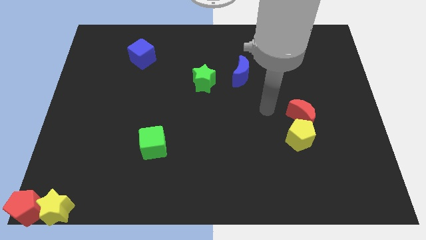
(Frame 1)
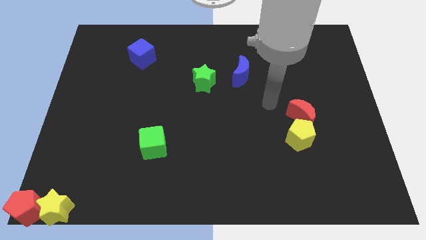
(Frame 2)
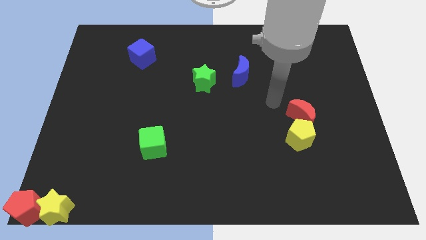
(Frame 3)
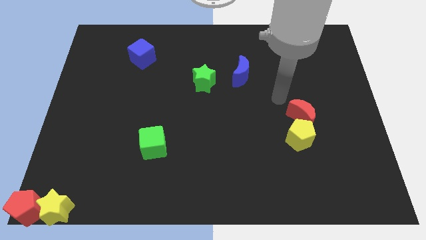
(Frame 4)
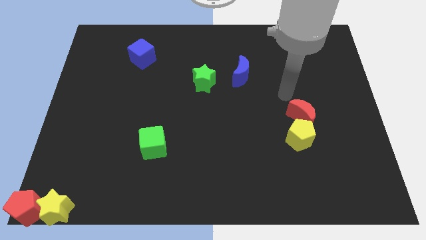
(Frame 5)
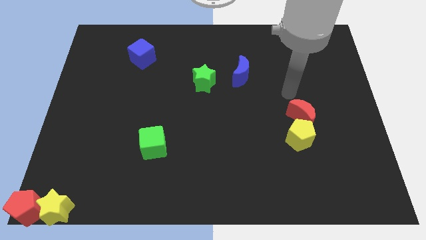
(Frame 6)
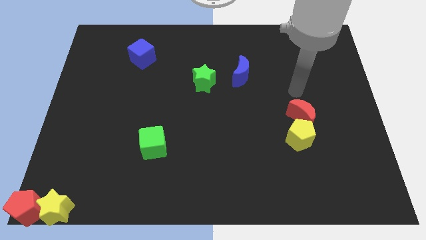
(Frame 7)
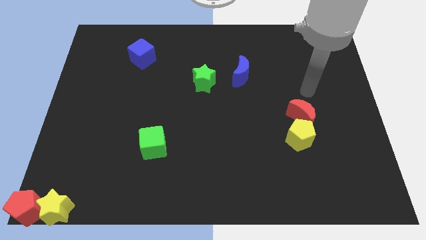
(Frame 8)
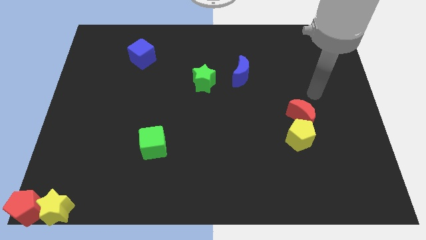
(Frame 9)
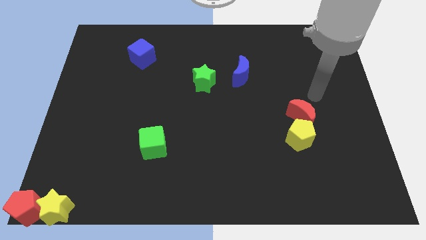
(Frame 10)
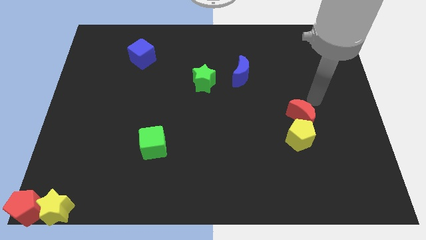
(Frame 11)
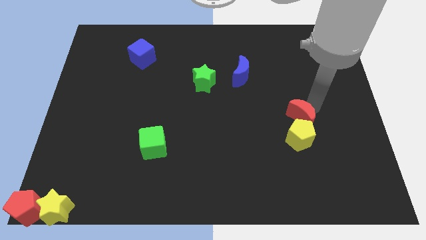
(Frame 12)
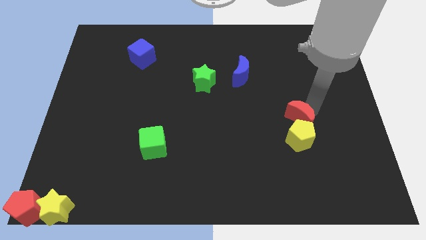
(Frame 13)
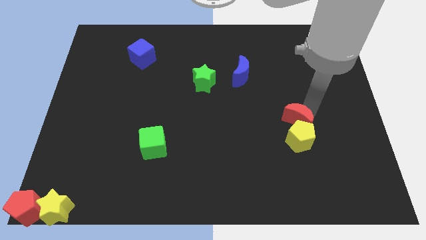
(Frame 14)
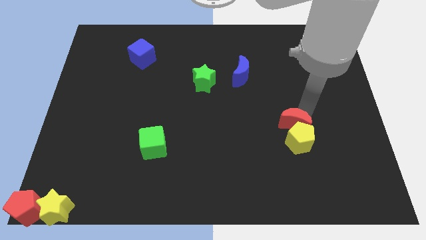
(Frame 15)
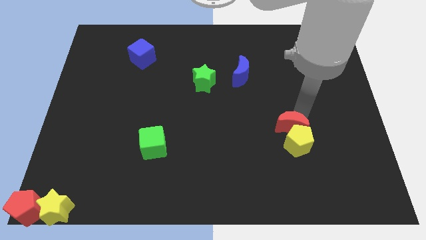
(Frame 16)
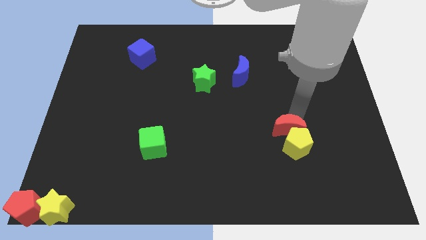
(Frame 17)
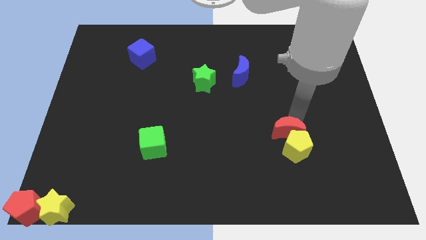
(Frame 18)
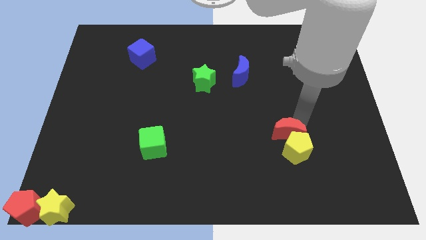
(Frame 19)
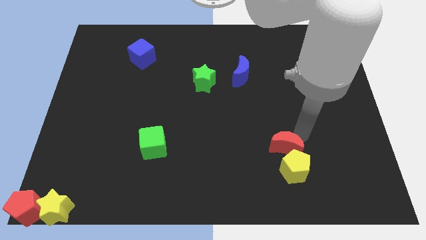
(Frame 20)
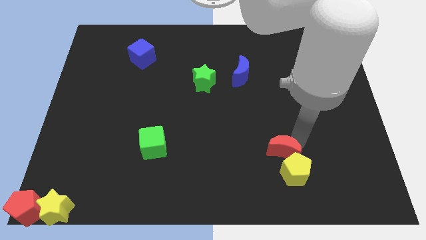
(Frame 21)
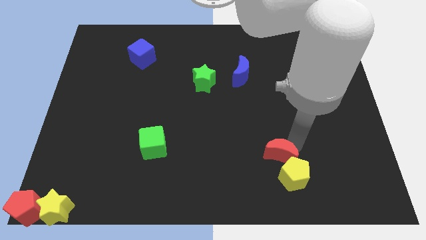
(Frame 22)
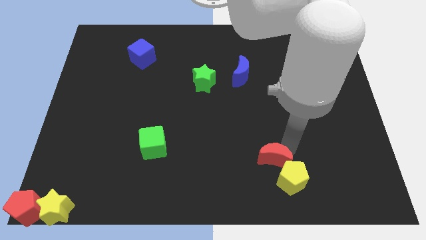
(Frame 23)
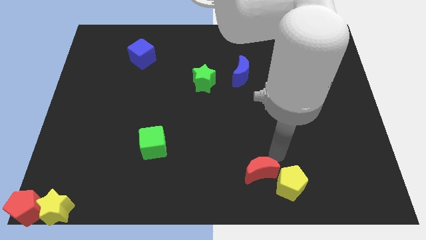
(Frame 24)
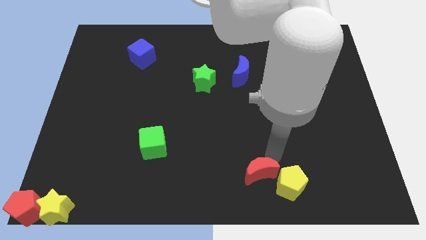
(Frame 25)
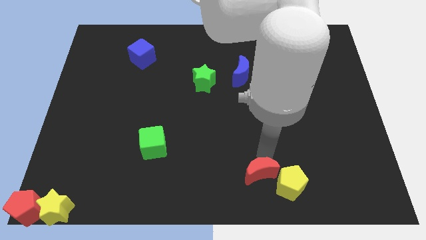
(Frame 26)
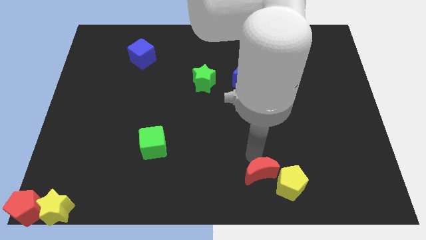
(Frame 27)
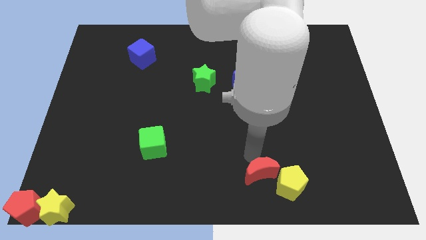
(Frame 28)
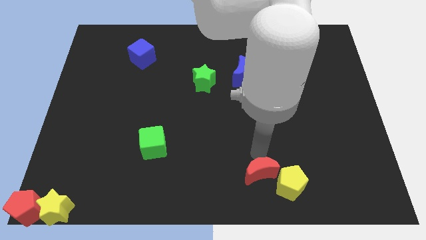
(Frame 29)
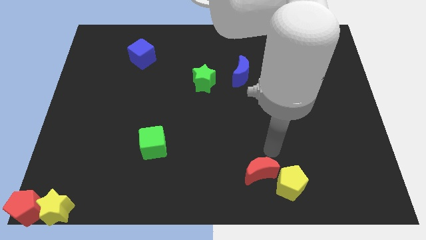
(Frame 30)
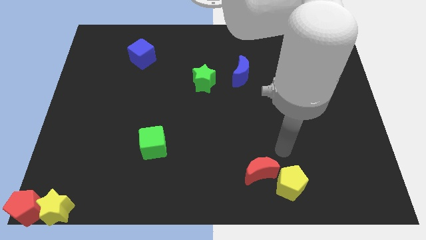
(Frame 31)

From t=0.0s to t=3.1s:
push the red crescent and yellow pentagon towards the bottom side

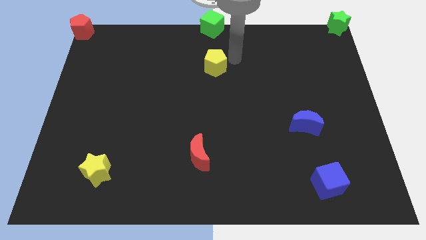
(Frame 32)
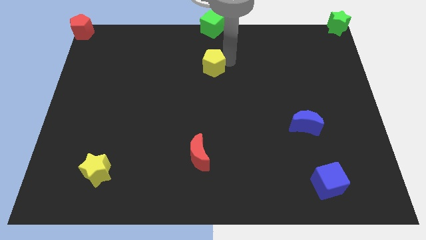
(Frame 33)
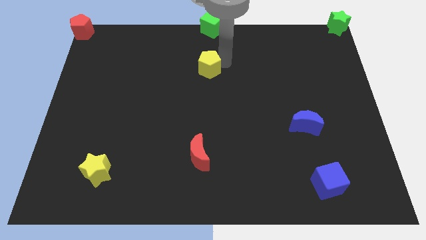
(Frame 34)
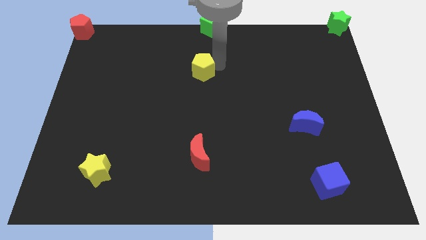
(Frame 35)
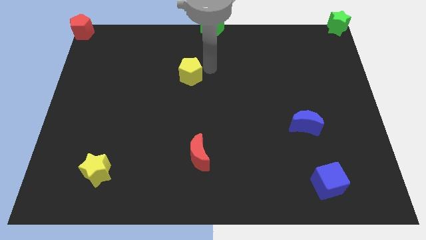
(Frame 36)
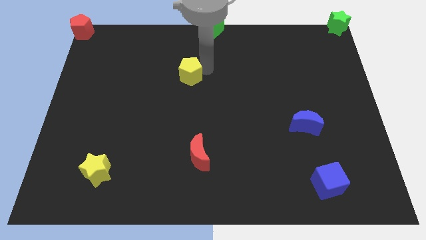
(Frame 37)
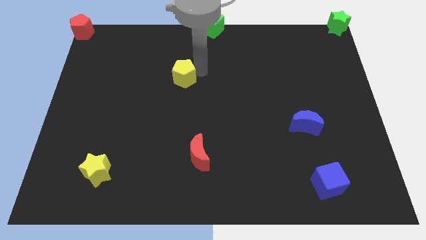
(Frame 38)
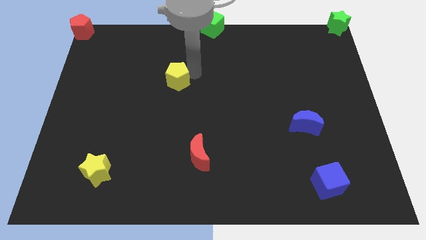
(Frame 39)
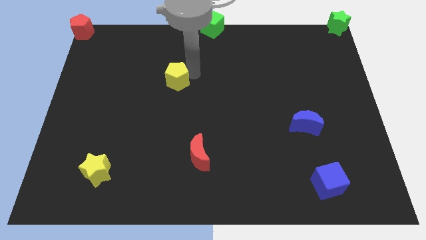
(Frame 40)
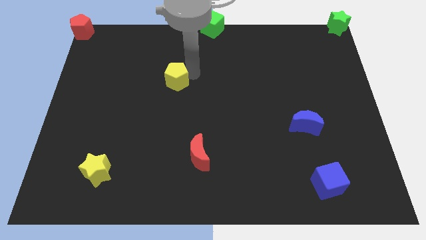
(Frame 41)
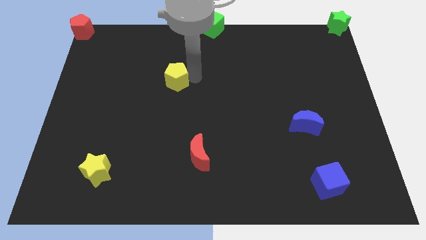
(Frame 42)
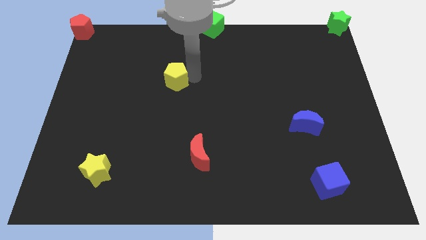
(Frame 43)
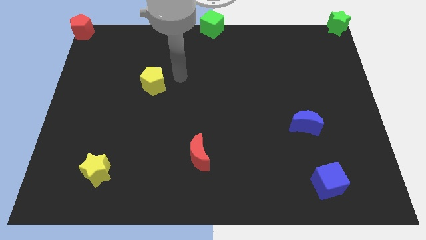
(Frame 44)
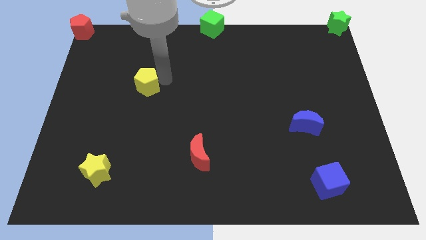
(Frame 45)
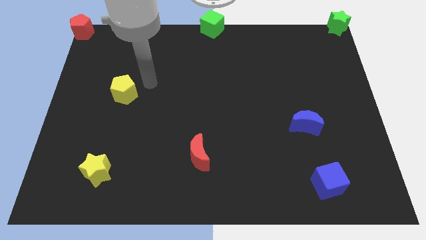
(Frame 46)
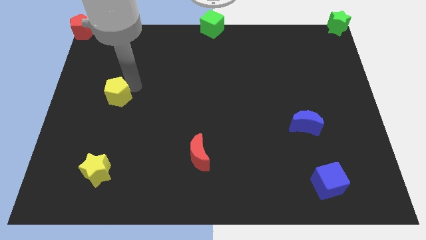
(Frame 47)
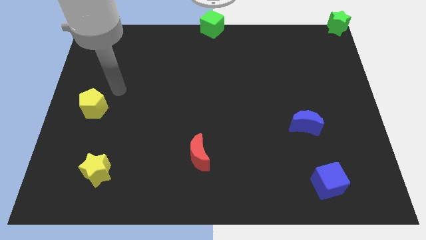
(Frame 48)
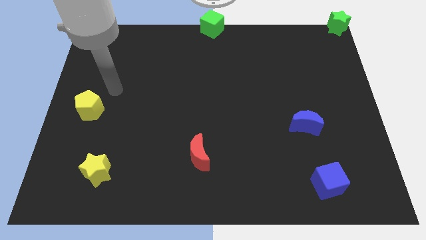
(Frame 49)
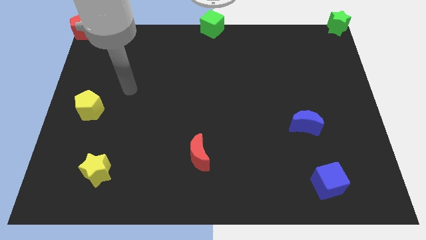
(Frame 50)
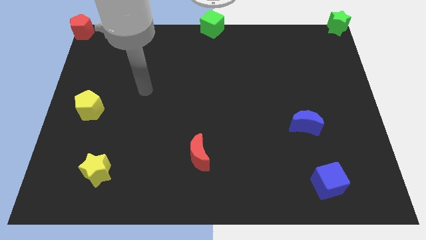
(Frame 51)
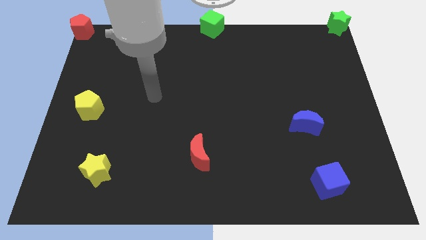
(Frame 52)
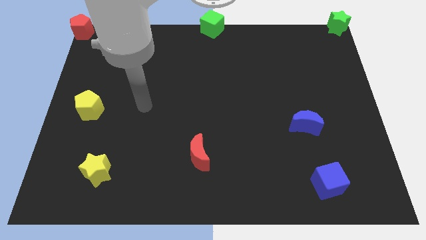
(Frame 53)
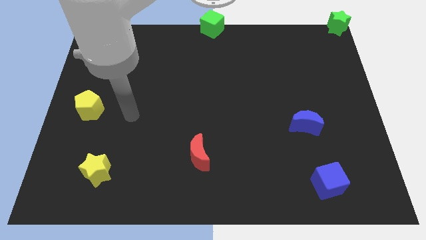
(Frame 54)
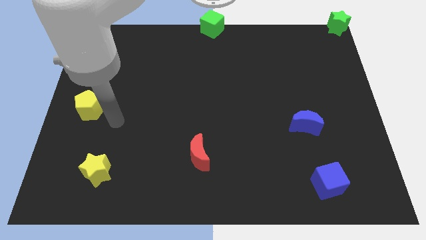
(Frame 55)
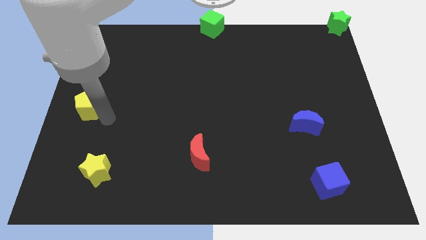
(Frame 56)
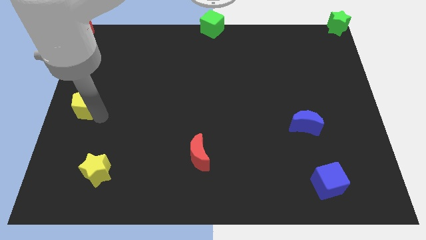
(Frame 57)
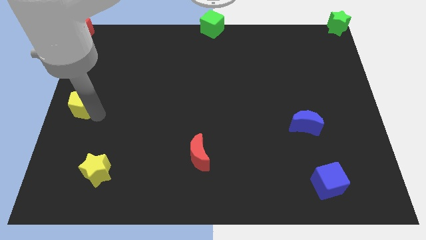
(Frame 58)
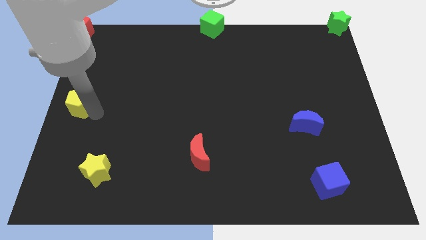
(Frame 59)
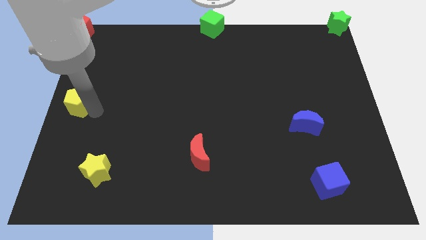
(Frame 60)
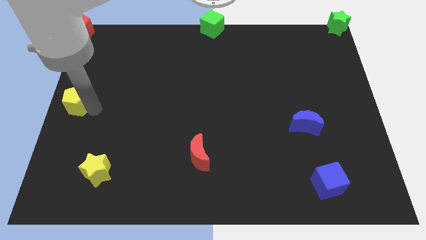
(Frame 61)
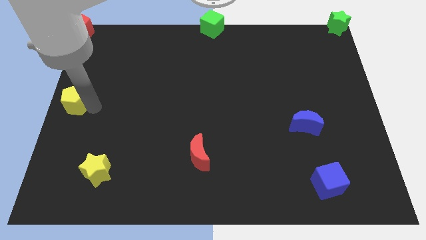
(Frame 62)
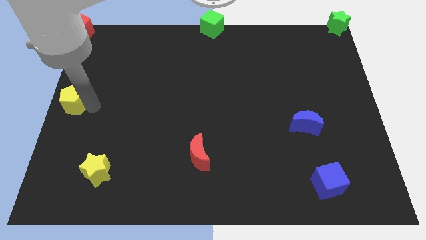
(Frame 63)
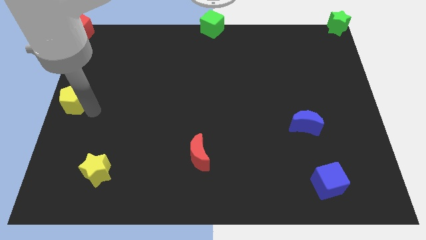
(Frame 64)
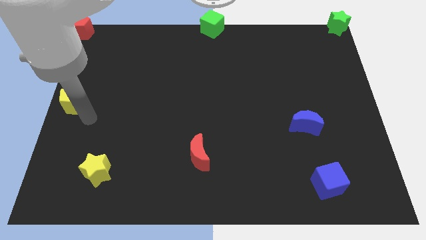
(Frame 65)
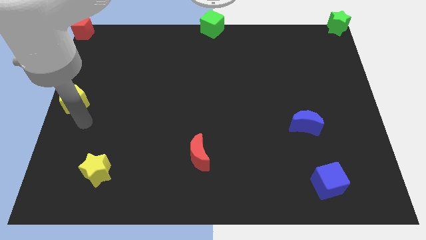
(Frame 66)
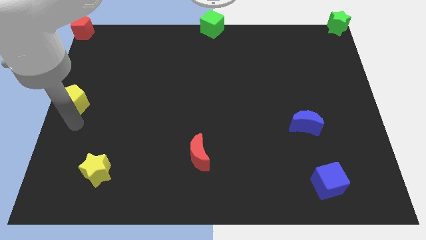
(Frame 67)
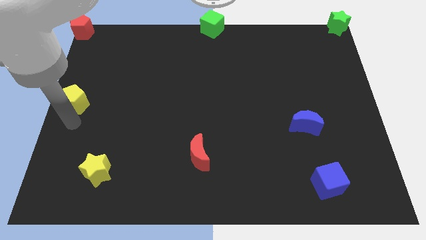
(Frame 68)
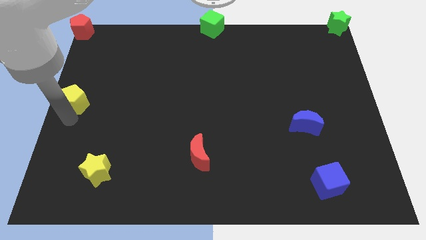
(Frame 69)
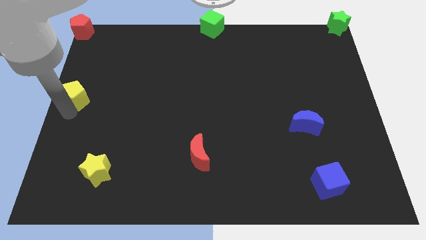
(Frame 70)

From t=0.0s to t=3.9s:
push the yellow pentagon to the center left of the board

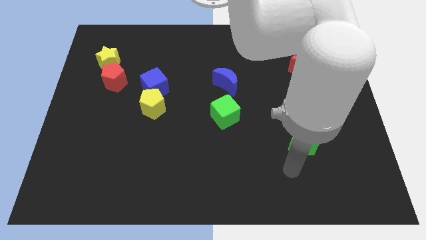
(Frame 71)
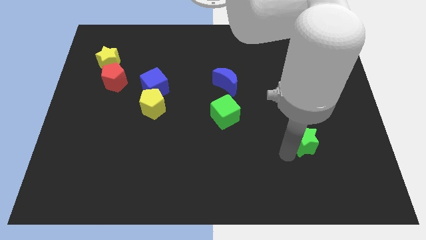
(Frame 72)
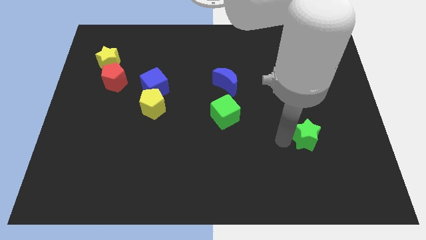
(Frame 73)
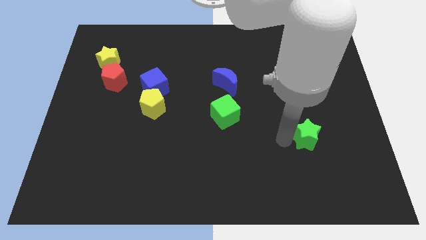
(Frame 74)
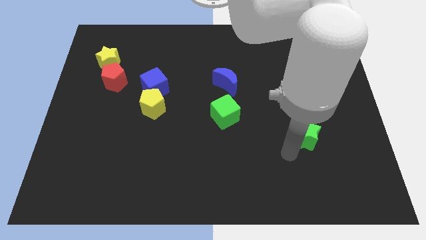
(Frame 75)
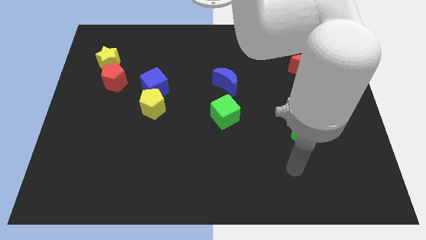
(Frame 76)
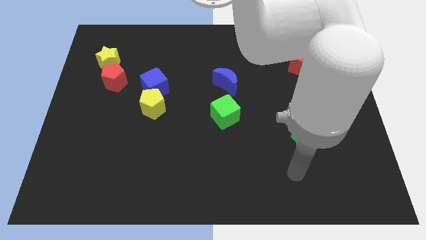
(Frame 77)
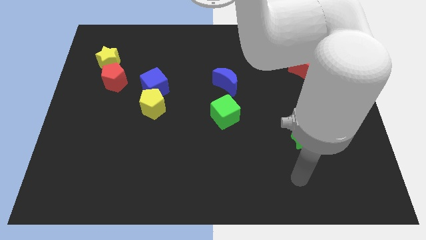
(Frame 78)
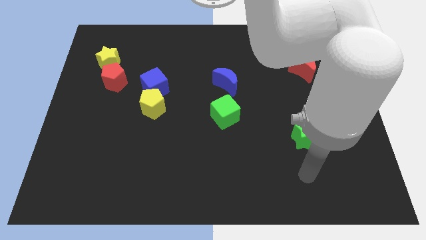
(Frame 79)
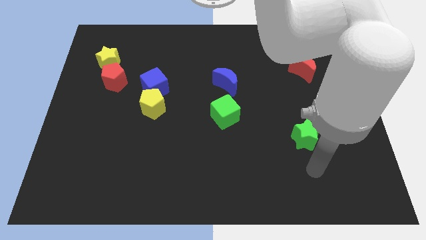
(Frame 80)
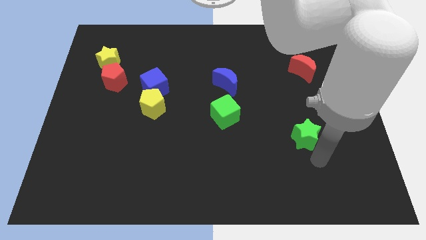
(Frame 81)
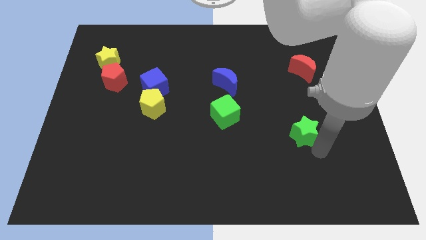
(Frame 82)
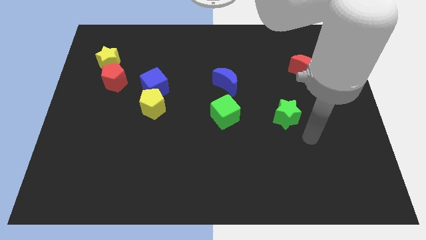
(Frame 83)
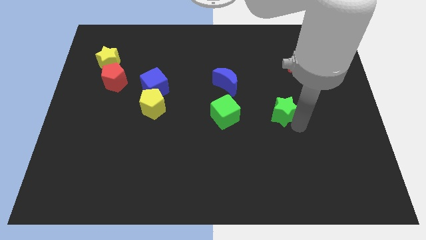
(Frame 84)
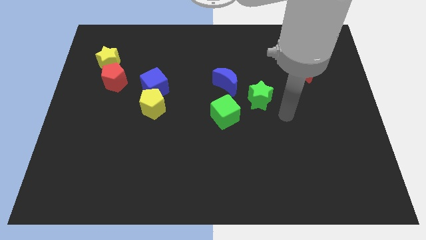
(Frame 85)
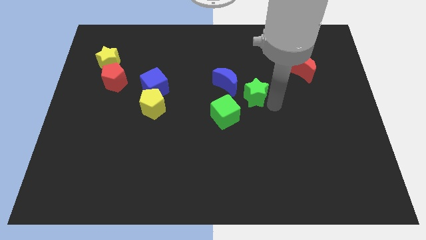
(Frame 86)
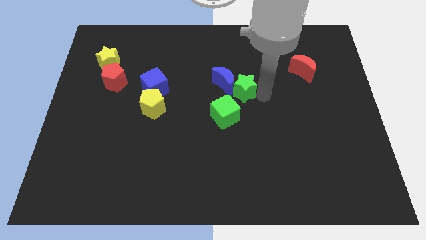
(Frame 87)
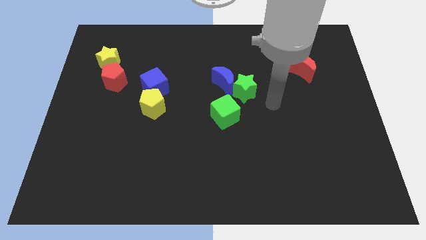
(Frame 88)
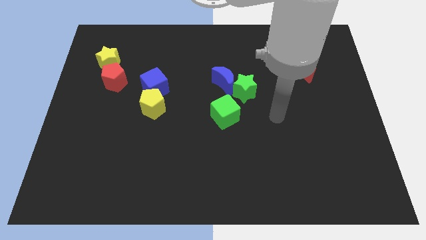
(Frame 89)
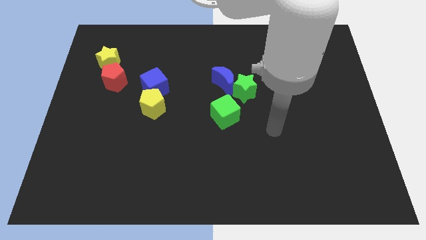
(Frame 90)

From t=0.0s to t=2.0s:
slide the green star into the blue moon
